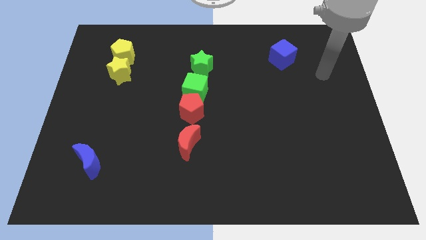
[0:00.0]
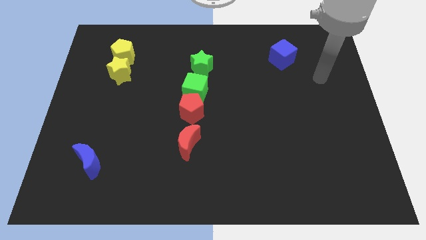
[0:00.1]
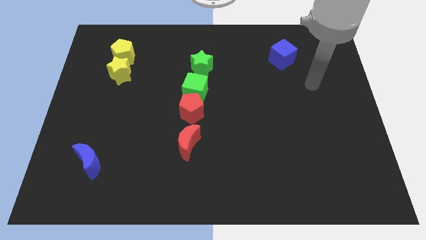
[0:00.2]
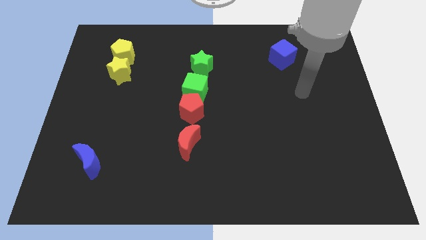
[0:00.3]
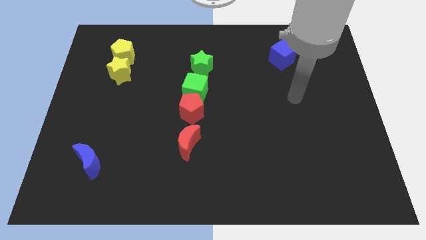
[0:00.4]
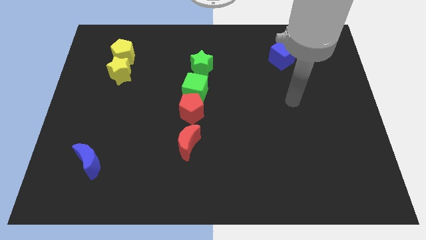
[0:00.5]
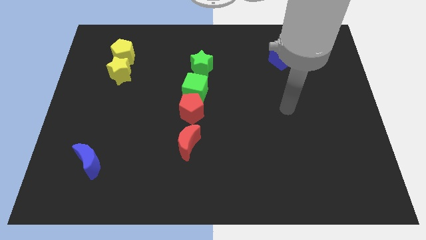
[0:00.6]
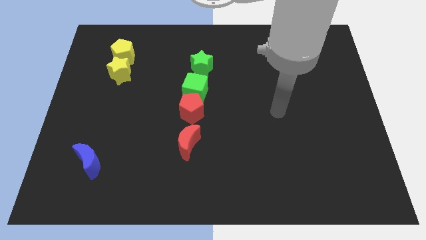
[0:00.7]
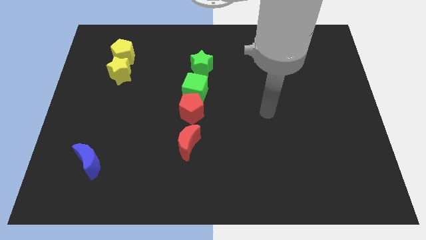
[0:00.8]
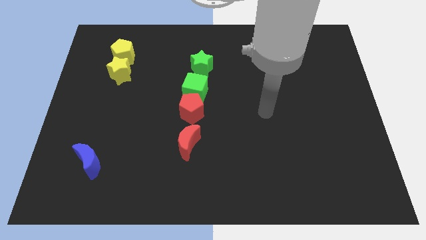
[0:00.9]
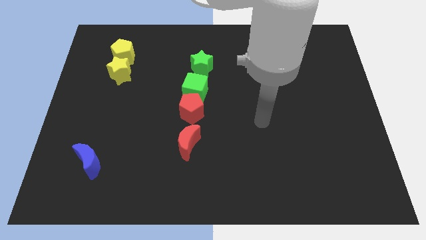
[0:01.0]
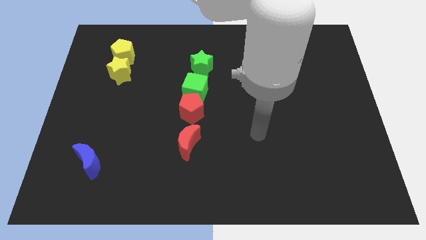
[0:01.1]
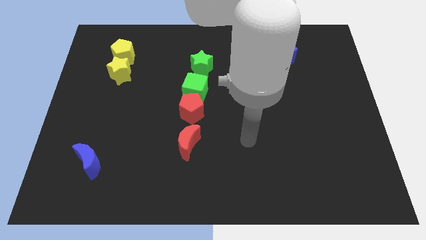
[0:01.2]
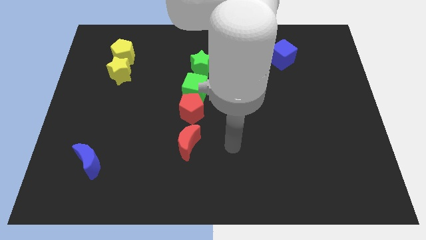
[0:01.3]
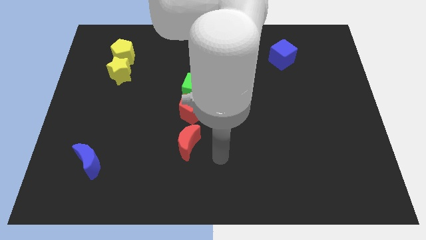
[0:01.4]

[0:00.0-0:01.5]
place your arm to the right of the red crescent

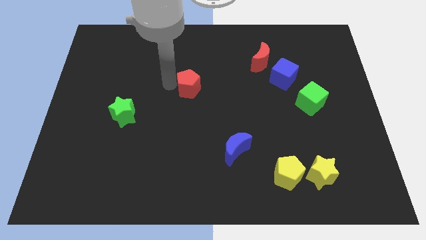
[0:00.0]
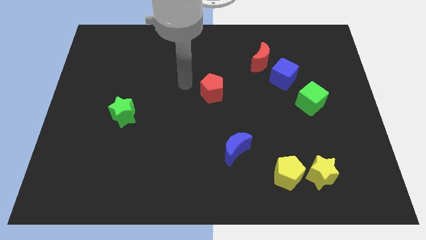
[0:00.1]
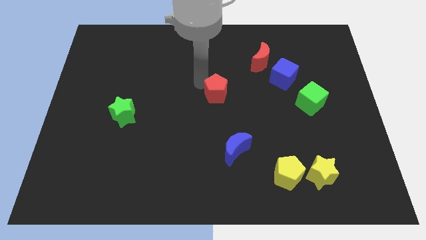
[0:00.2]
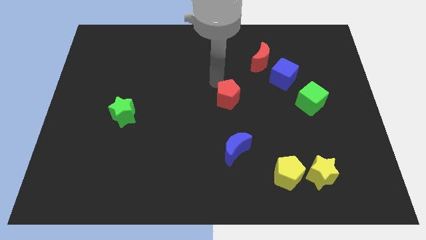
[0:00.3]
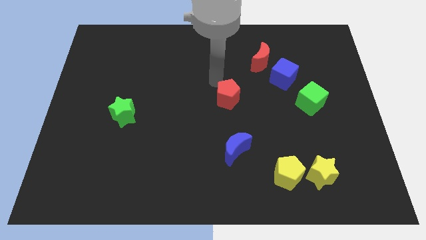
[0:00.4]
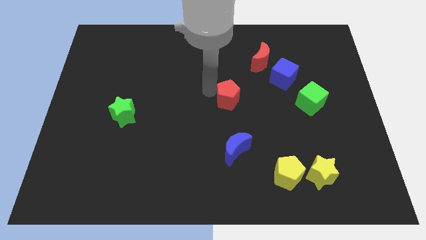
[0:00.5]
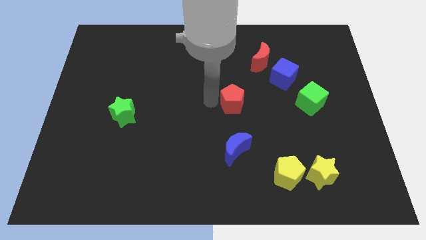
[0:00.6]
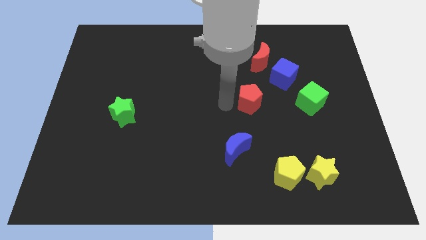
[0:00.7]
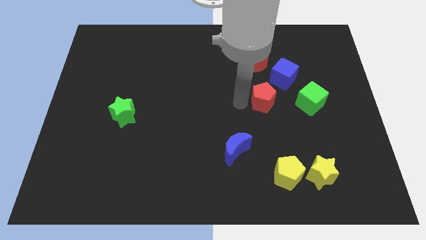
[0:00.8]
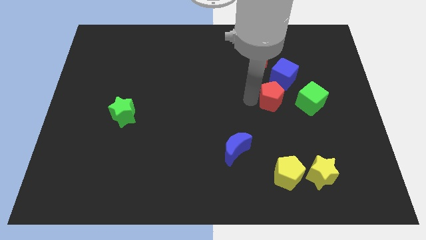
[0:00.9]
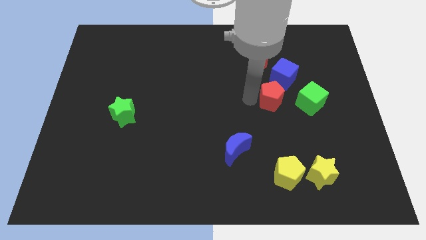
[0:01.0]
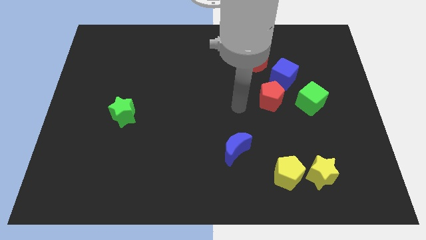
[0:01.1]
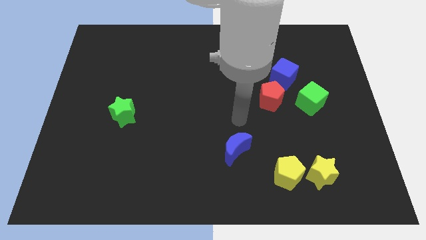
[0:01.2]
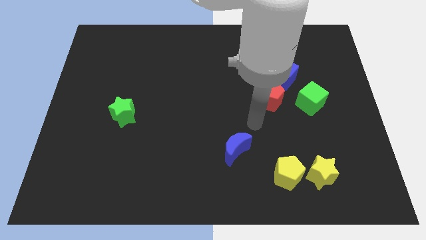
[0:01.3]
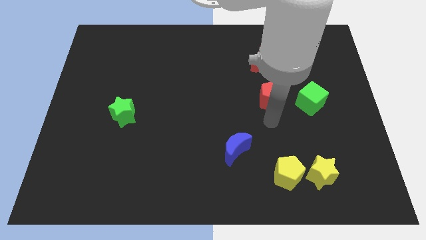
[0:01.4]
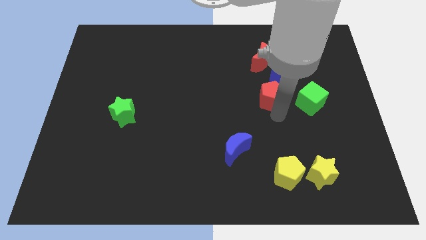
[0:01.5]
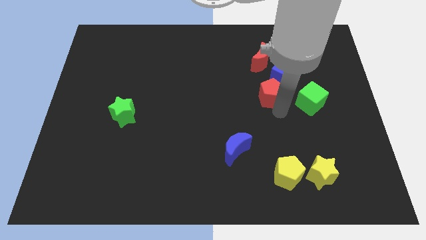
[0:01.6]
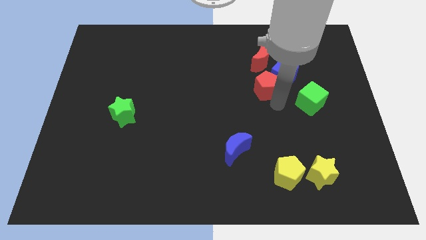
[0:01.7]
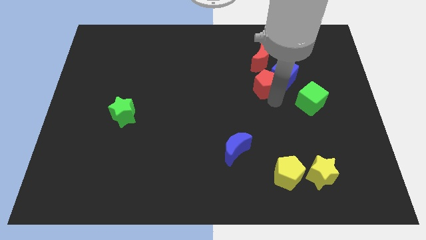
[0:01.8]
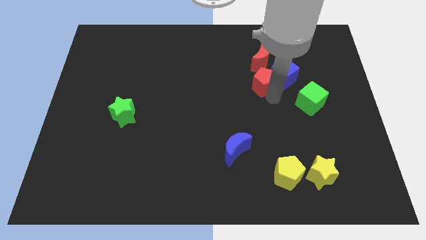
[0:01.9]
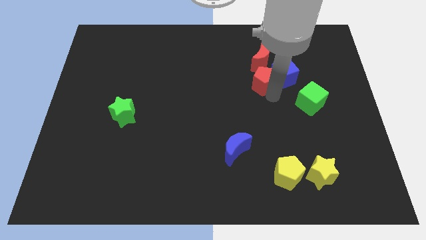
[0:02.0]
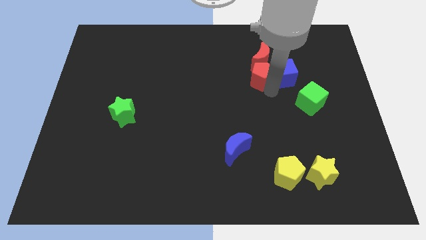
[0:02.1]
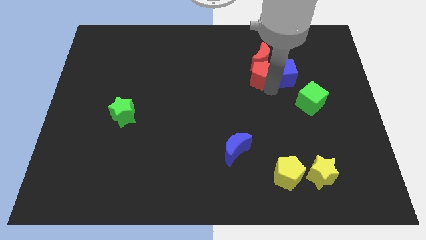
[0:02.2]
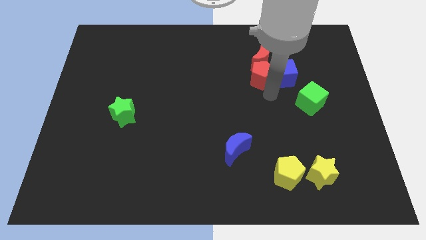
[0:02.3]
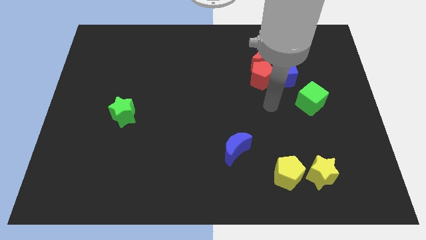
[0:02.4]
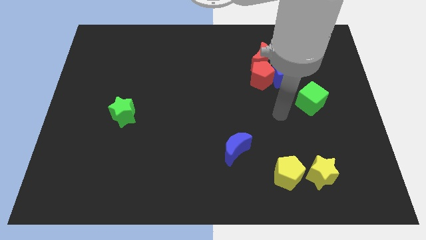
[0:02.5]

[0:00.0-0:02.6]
move red pentagon into left of the blue cube

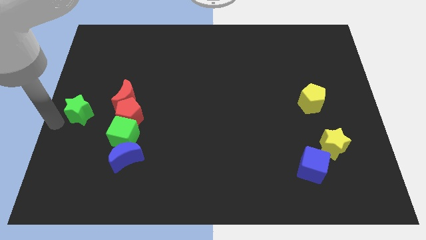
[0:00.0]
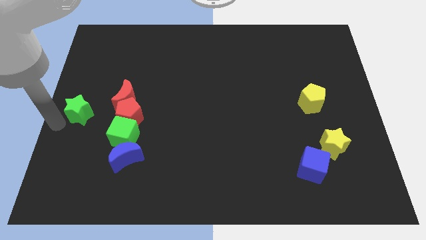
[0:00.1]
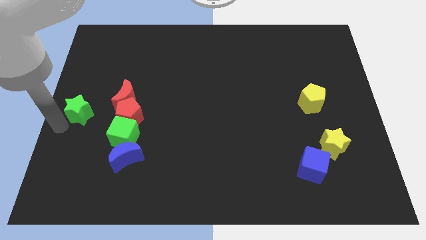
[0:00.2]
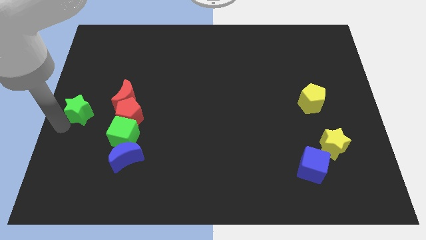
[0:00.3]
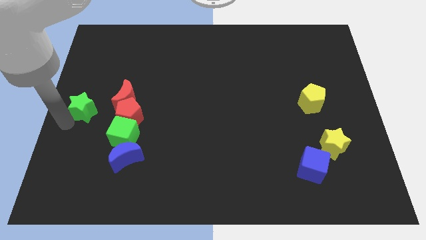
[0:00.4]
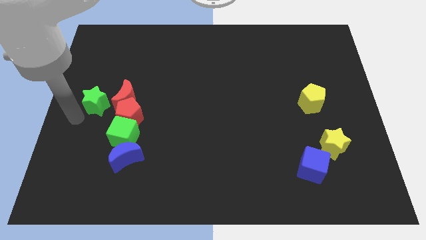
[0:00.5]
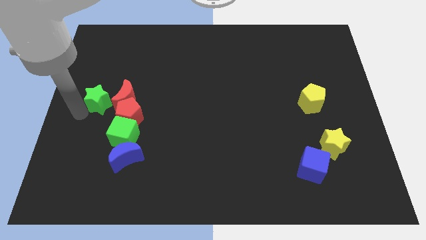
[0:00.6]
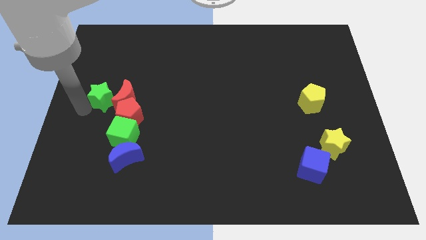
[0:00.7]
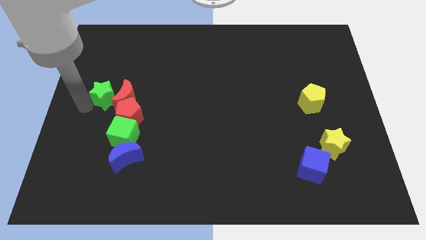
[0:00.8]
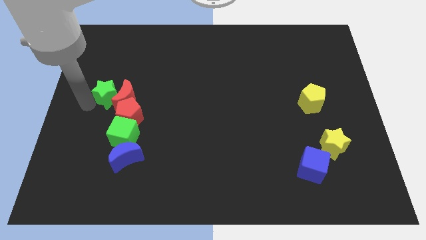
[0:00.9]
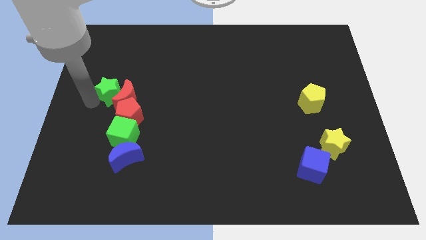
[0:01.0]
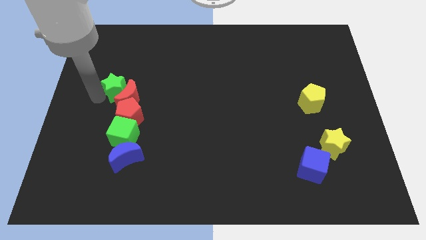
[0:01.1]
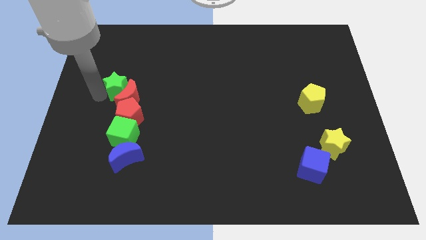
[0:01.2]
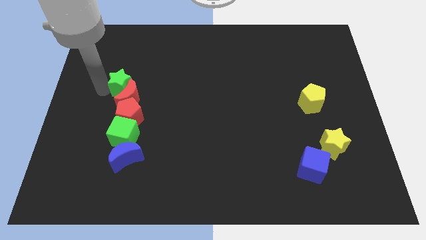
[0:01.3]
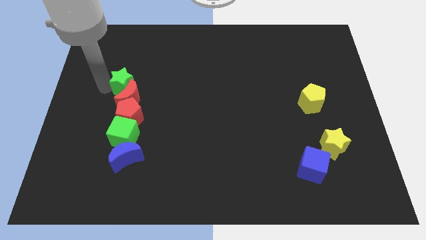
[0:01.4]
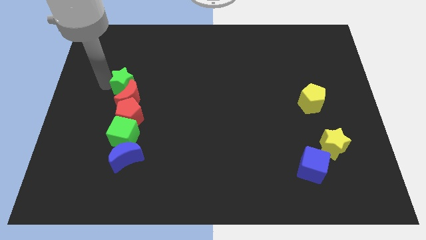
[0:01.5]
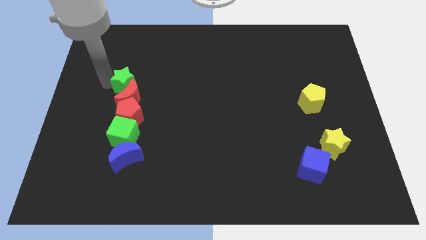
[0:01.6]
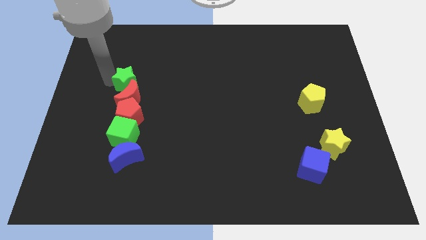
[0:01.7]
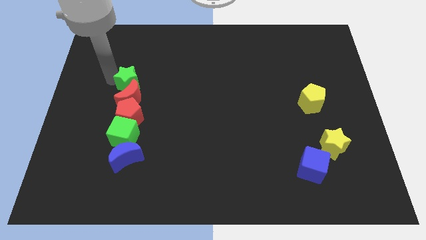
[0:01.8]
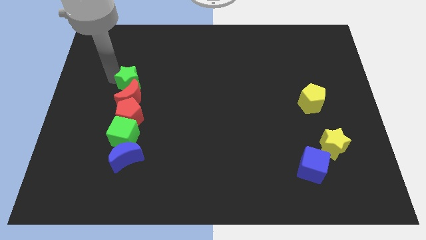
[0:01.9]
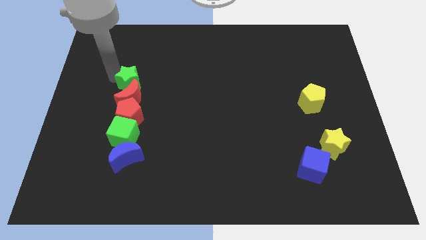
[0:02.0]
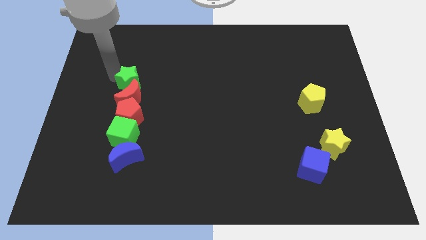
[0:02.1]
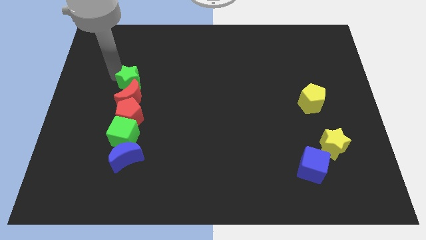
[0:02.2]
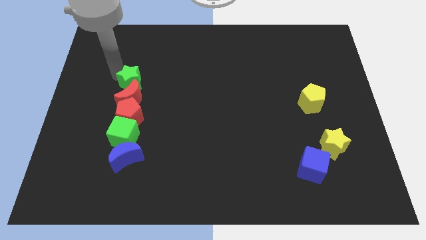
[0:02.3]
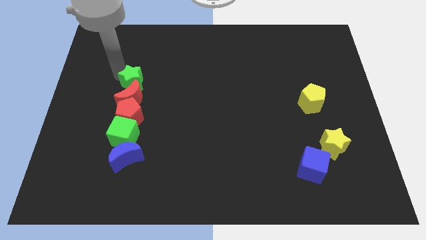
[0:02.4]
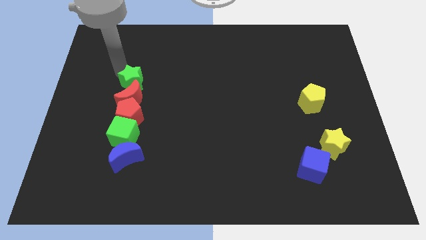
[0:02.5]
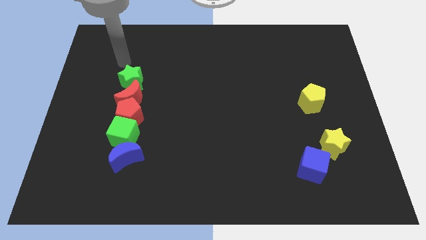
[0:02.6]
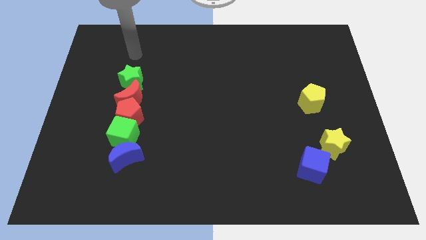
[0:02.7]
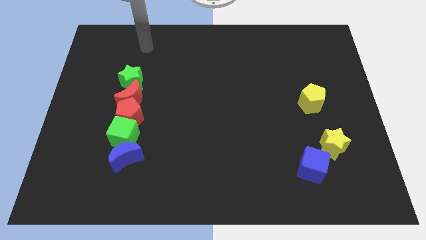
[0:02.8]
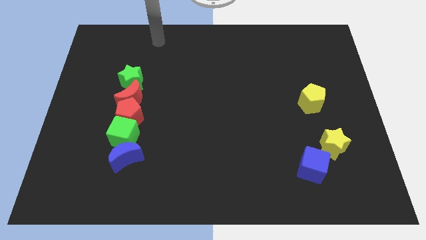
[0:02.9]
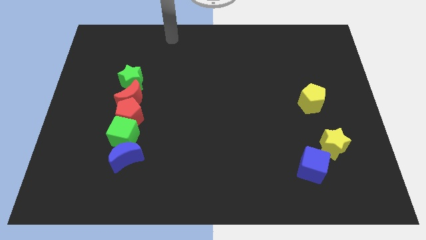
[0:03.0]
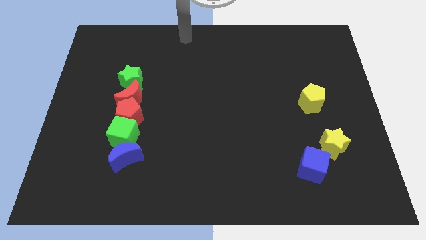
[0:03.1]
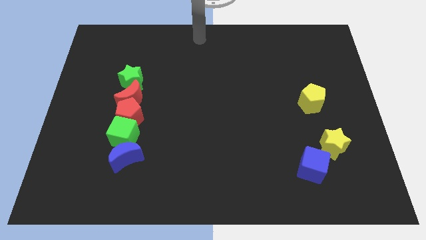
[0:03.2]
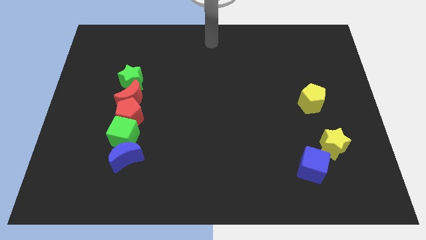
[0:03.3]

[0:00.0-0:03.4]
place the green star to the top of blocks forming vertical line

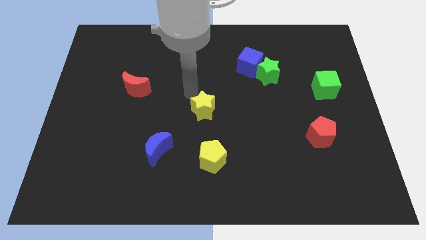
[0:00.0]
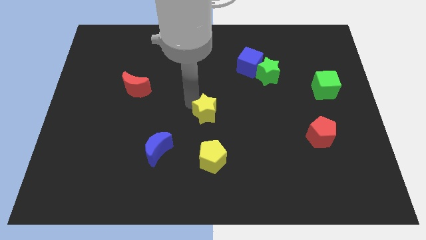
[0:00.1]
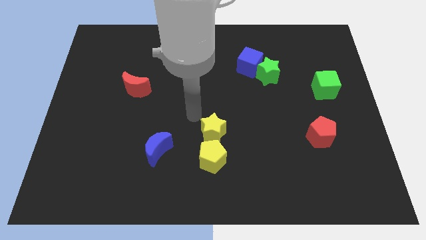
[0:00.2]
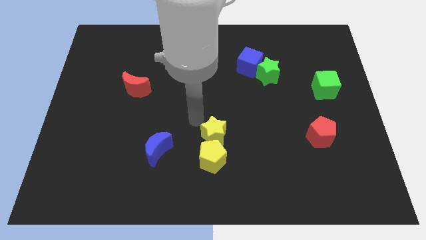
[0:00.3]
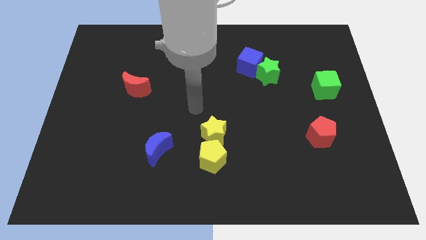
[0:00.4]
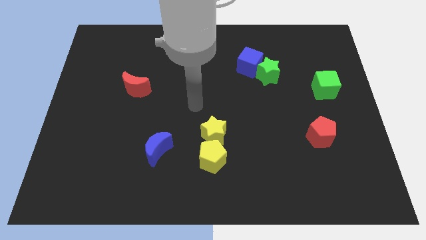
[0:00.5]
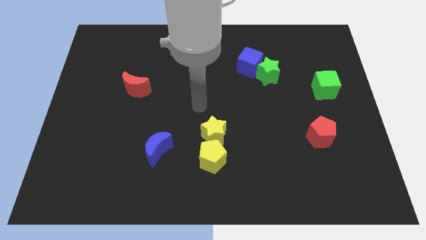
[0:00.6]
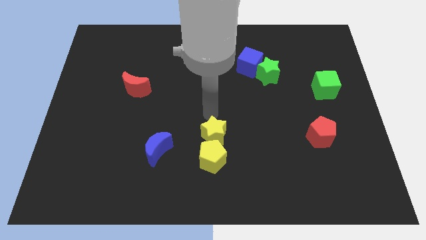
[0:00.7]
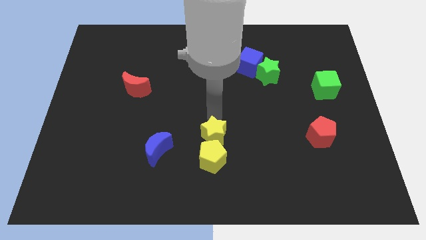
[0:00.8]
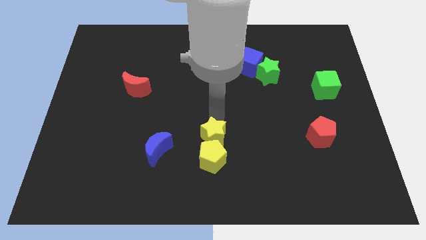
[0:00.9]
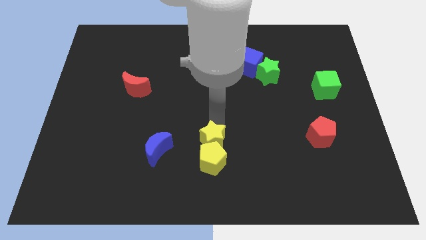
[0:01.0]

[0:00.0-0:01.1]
push yellow star on top of yellow pentagon

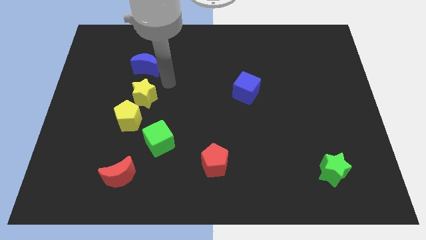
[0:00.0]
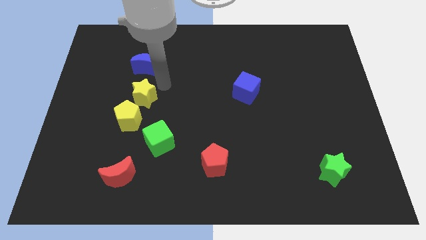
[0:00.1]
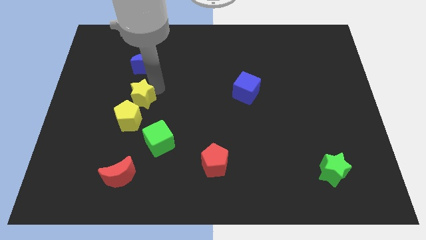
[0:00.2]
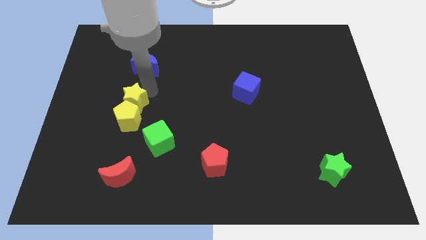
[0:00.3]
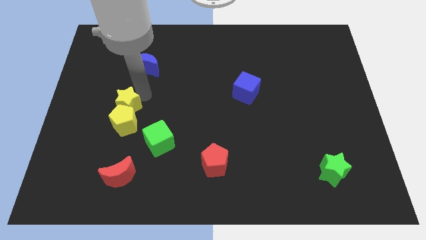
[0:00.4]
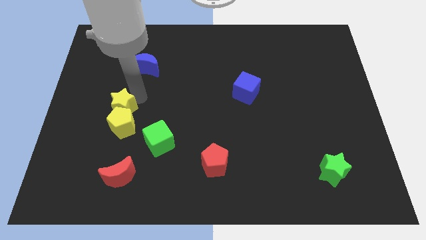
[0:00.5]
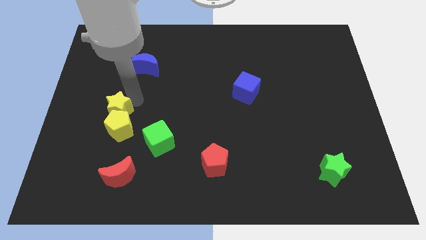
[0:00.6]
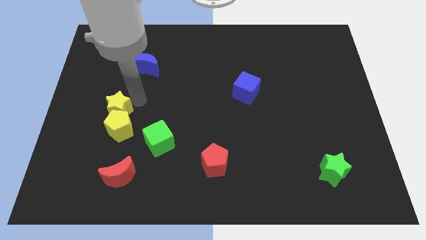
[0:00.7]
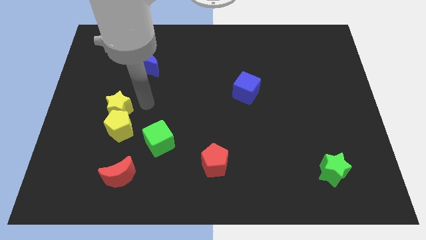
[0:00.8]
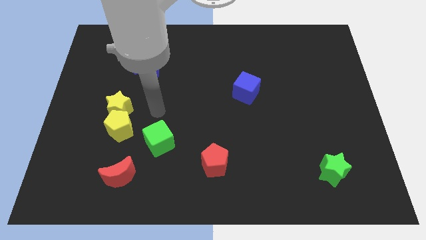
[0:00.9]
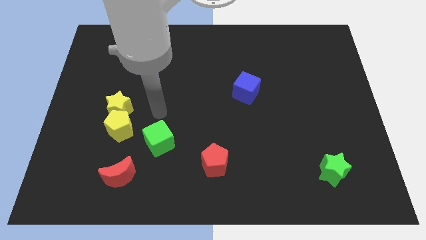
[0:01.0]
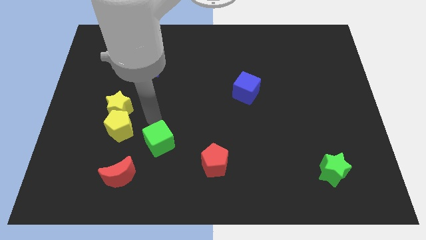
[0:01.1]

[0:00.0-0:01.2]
move the yellow blocks slightly to the bottom
